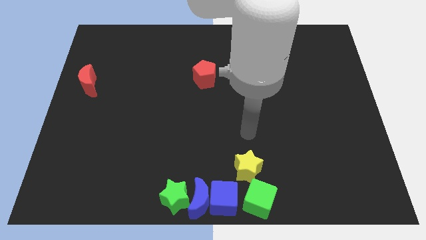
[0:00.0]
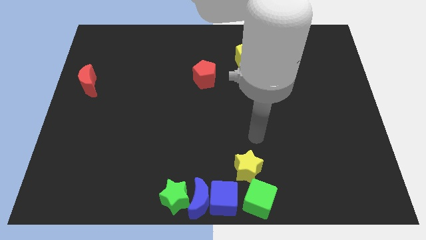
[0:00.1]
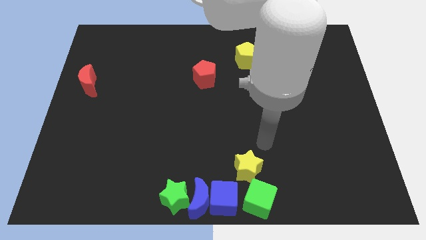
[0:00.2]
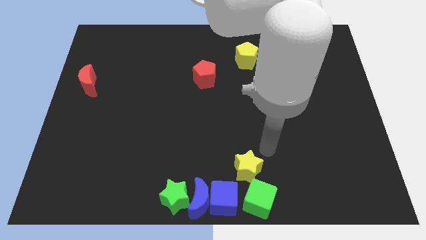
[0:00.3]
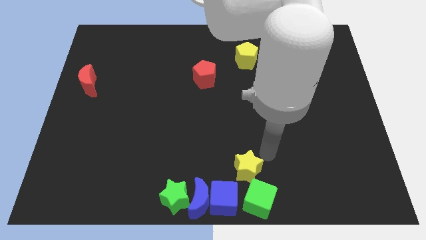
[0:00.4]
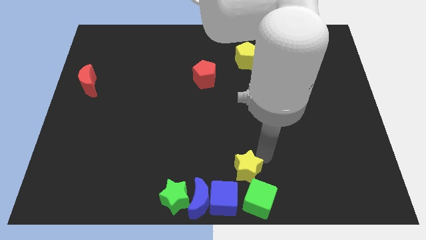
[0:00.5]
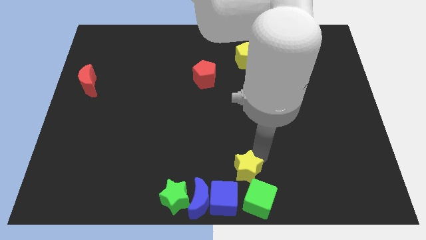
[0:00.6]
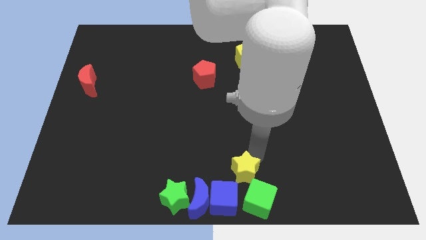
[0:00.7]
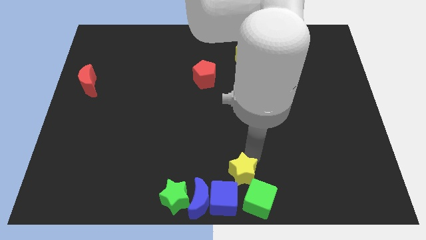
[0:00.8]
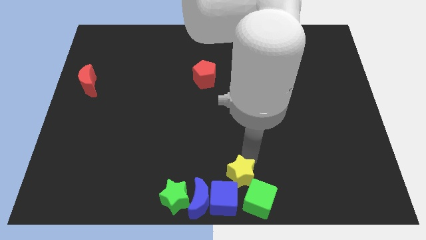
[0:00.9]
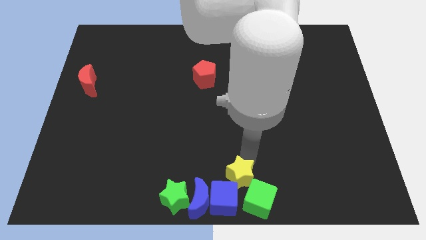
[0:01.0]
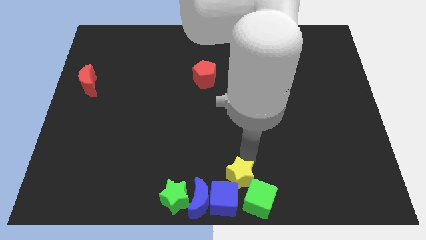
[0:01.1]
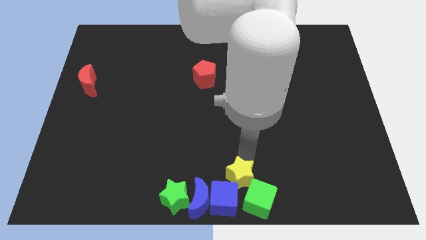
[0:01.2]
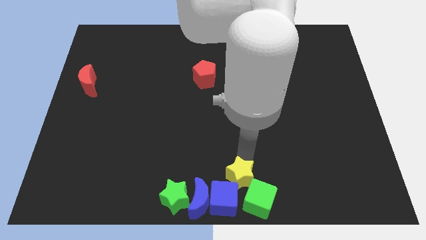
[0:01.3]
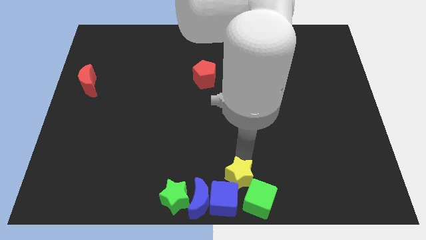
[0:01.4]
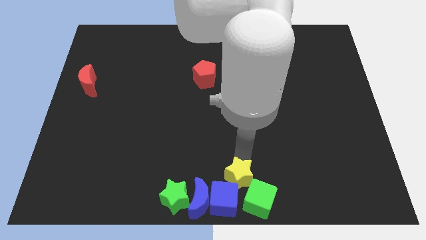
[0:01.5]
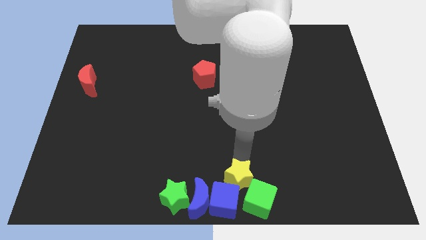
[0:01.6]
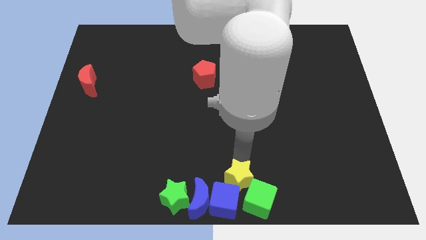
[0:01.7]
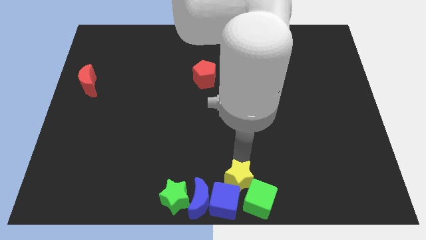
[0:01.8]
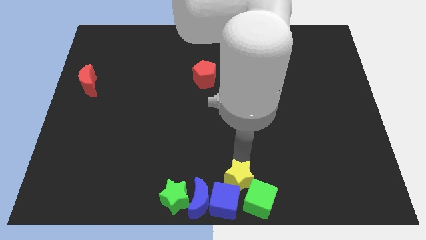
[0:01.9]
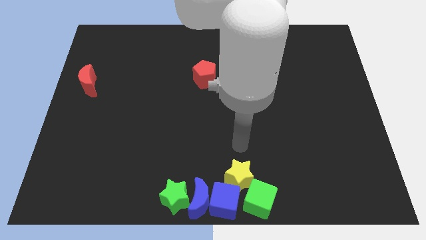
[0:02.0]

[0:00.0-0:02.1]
push the yellow star into the blue cube

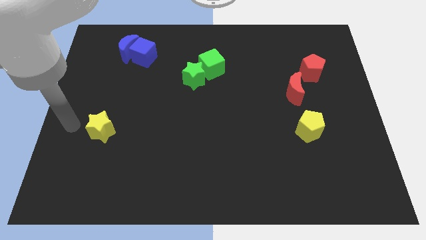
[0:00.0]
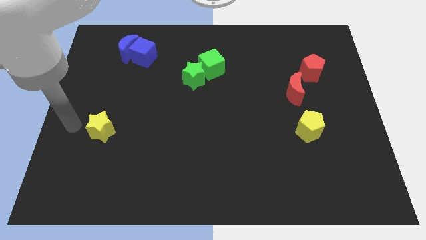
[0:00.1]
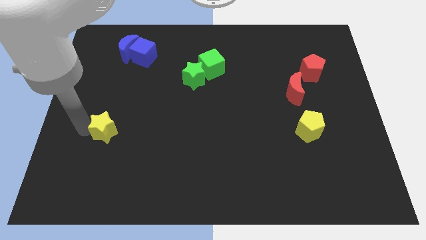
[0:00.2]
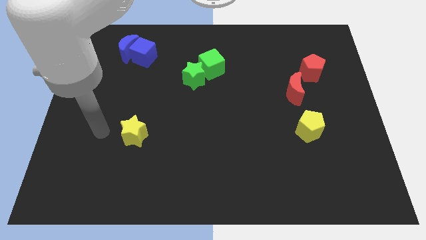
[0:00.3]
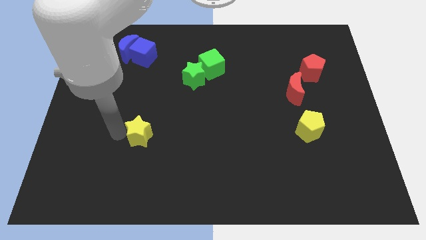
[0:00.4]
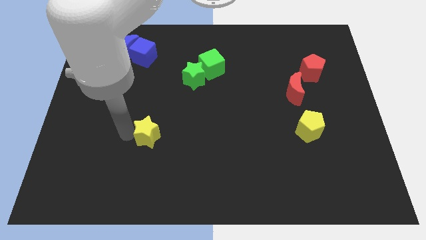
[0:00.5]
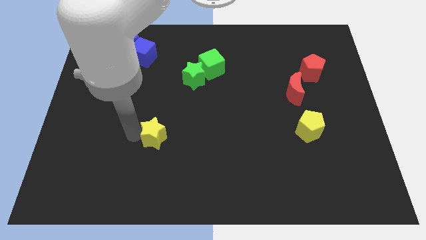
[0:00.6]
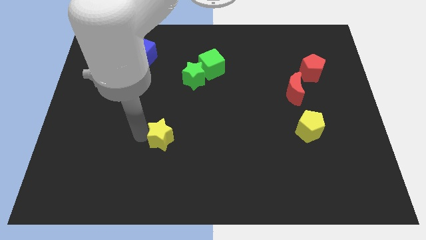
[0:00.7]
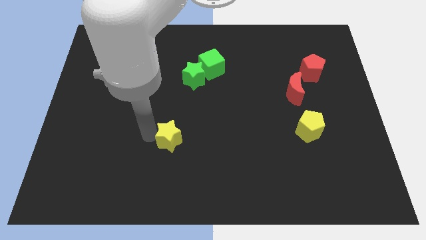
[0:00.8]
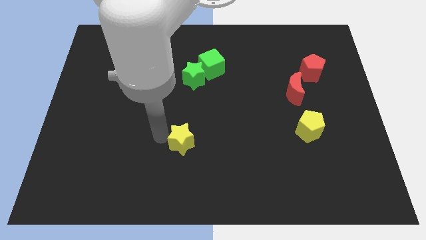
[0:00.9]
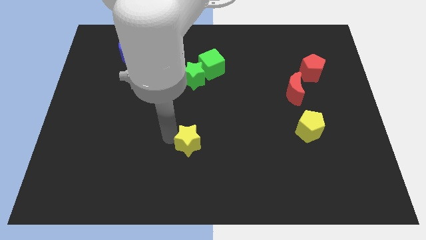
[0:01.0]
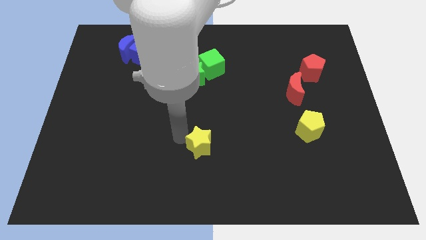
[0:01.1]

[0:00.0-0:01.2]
move the yellow star to the bottom of the green star

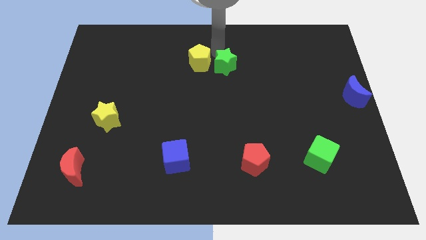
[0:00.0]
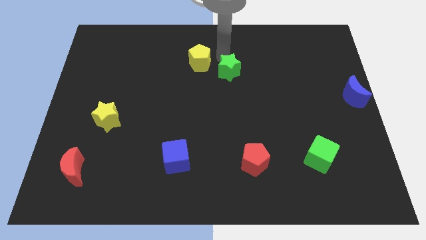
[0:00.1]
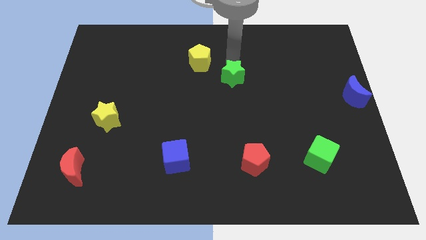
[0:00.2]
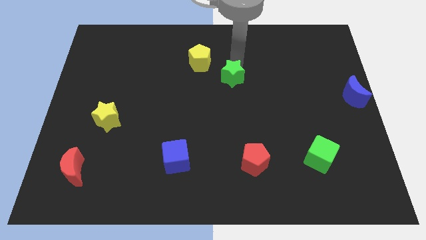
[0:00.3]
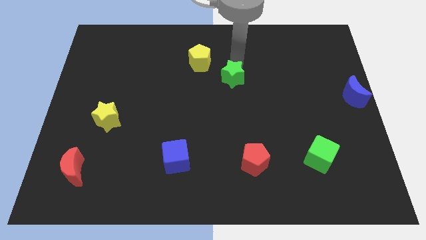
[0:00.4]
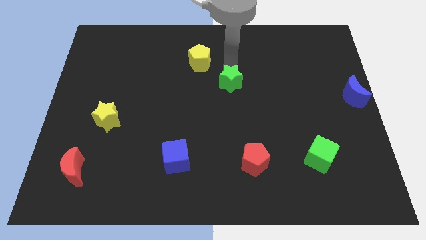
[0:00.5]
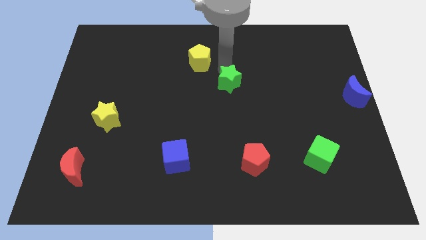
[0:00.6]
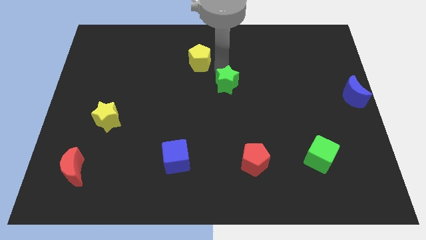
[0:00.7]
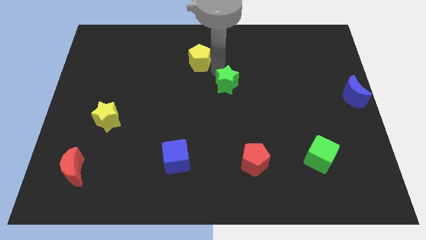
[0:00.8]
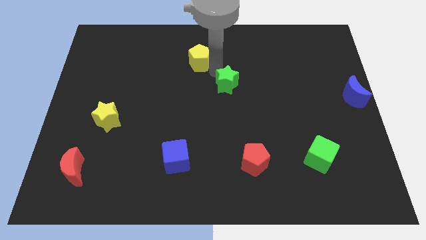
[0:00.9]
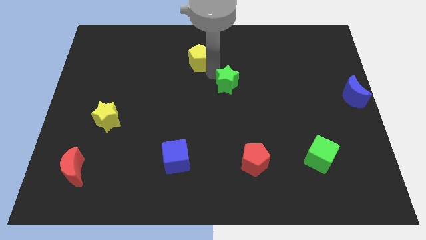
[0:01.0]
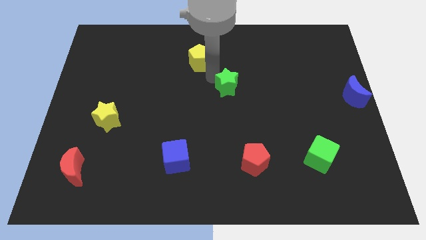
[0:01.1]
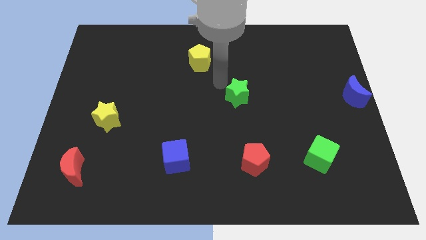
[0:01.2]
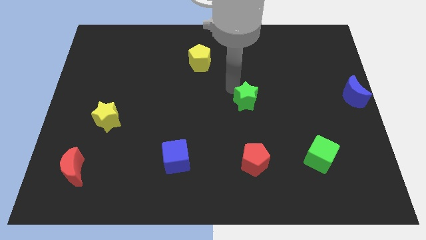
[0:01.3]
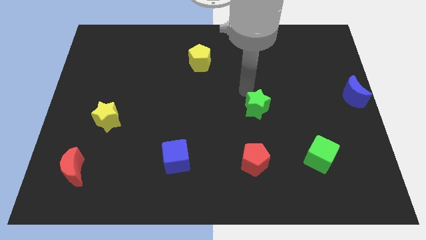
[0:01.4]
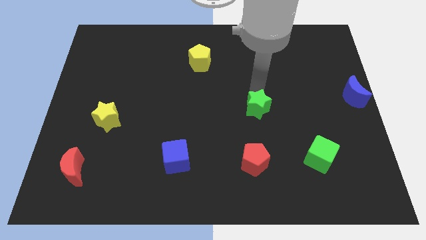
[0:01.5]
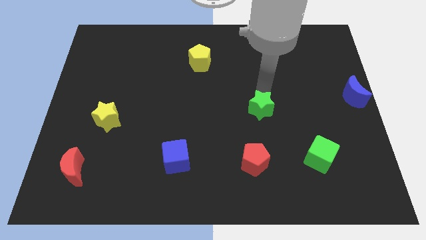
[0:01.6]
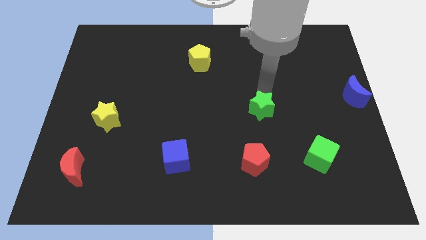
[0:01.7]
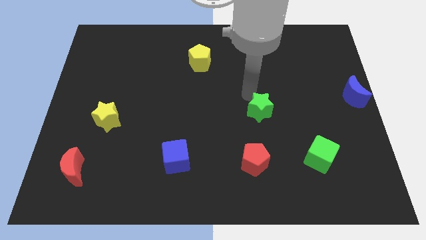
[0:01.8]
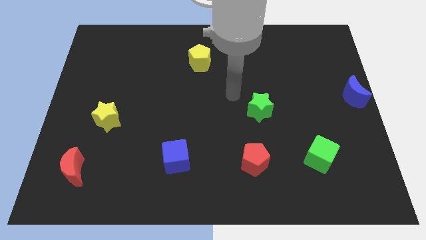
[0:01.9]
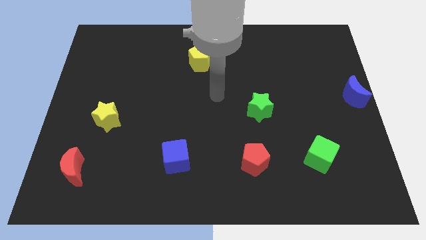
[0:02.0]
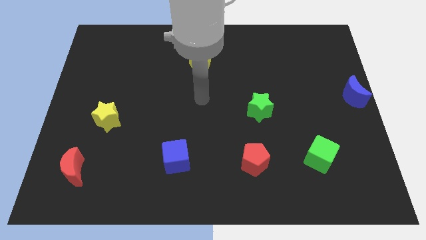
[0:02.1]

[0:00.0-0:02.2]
move the green star towards the red pentagon

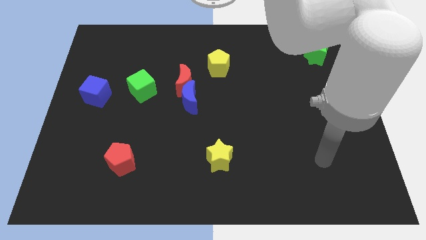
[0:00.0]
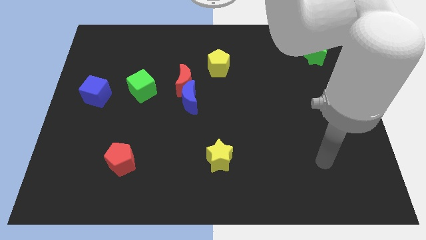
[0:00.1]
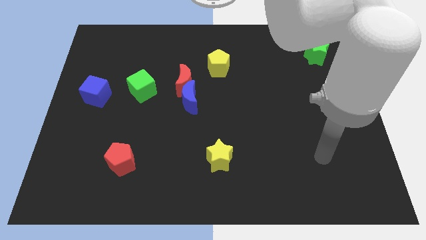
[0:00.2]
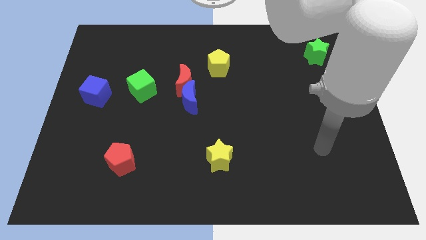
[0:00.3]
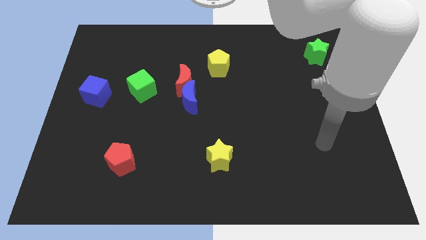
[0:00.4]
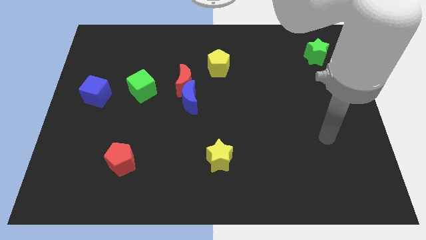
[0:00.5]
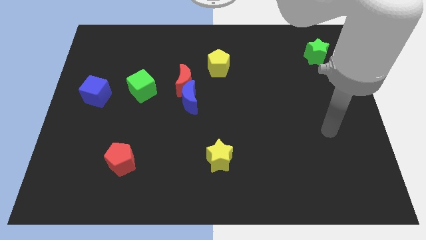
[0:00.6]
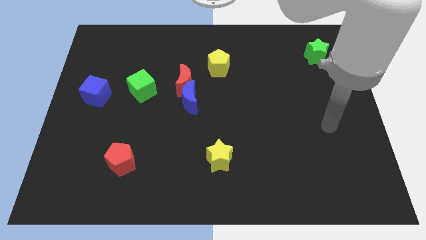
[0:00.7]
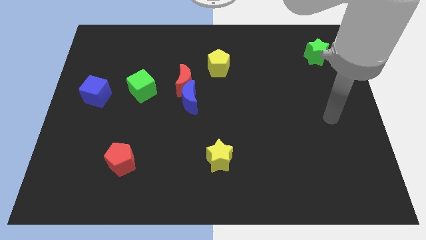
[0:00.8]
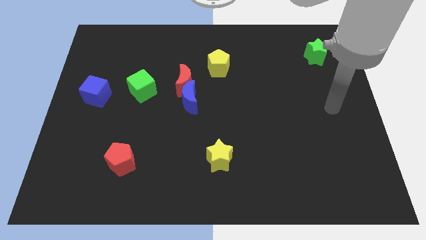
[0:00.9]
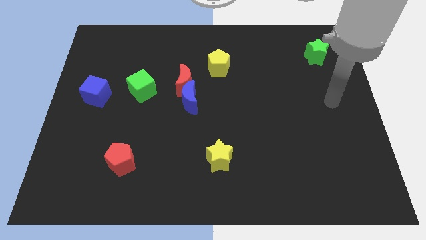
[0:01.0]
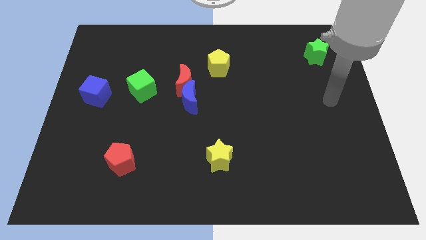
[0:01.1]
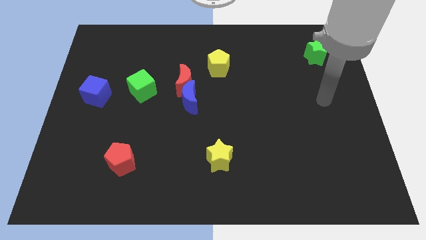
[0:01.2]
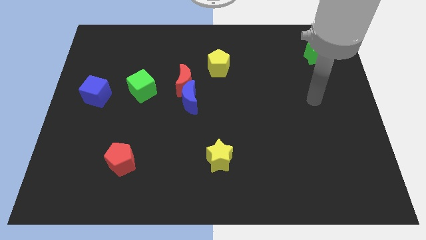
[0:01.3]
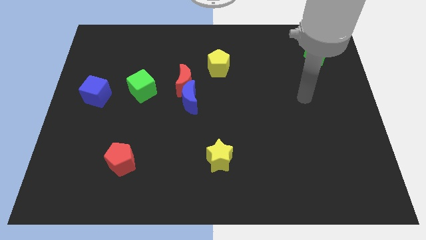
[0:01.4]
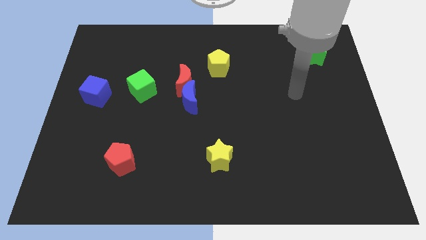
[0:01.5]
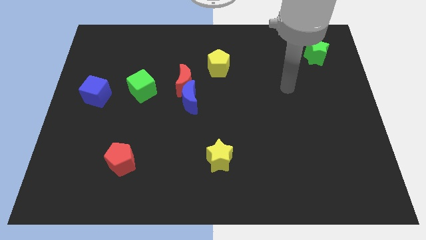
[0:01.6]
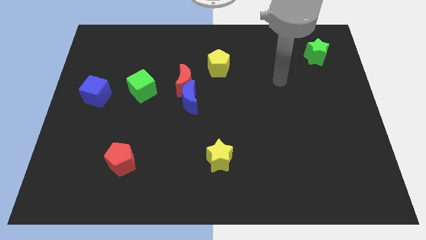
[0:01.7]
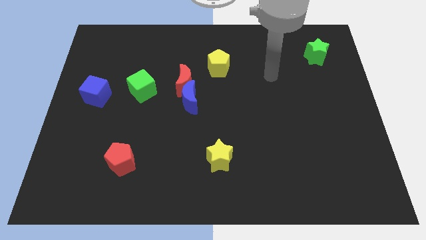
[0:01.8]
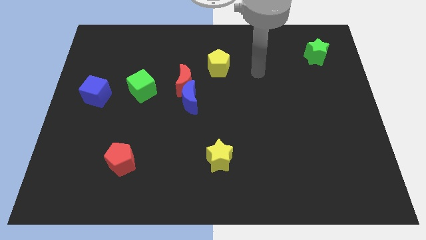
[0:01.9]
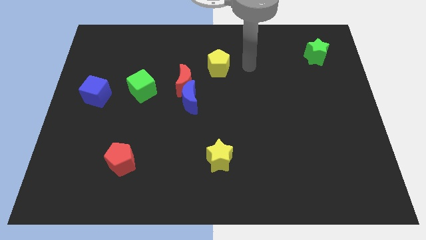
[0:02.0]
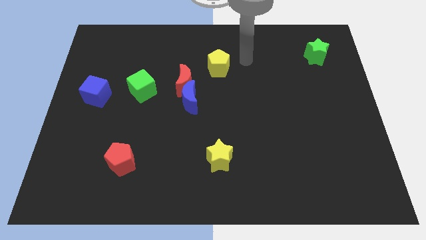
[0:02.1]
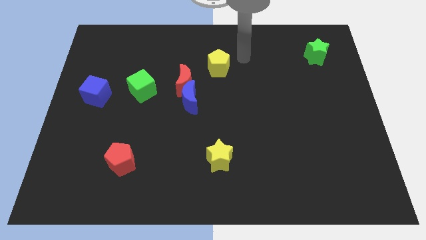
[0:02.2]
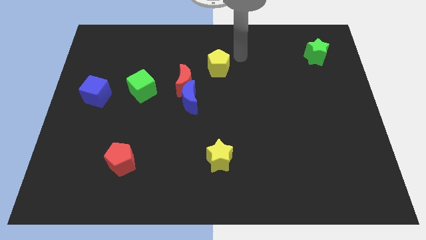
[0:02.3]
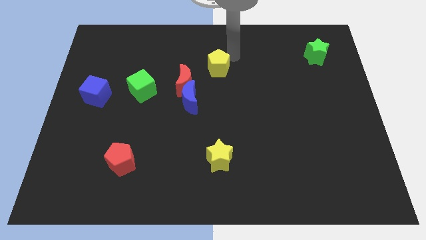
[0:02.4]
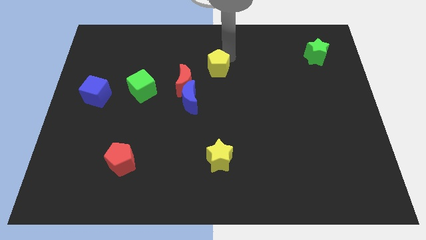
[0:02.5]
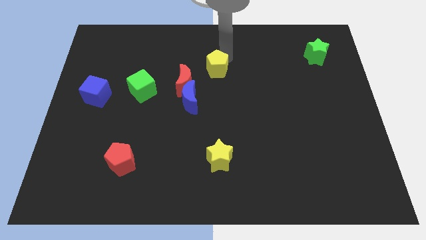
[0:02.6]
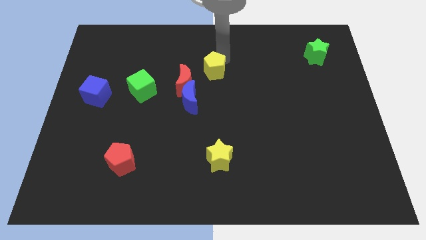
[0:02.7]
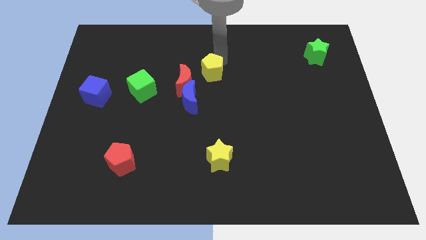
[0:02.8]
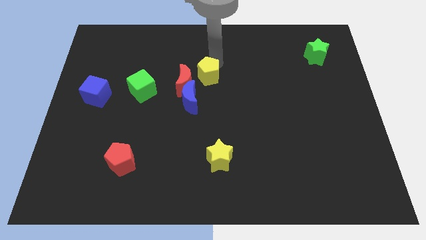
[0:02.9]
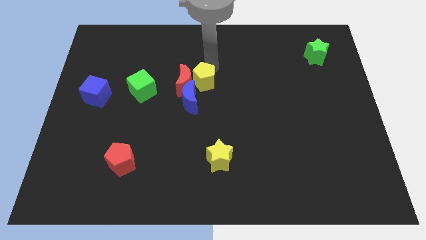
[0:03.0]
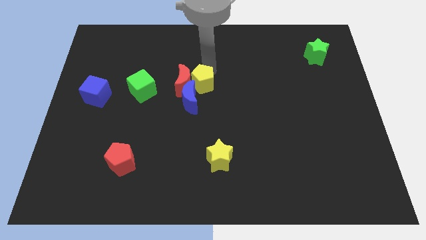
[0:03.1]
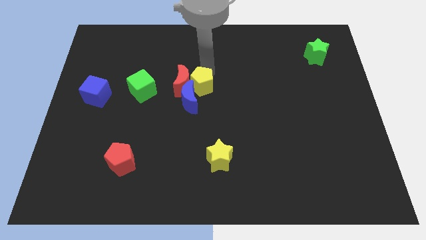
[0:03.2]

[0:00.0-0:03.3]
push the yellow pentagon to the right side of the red crescent

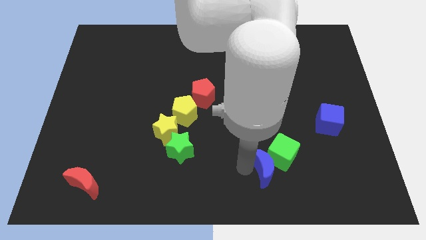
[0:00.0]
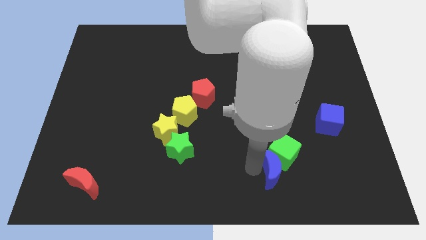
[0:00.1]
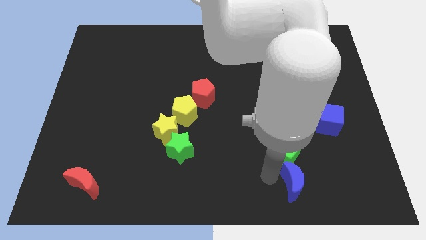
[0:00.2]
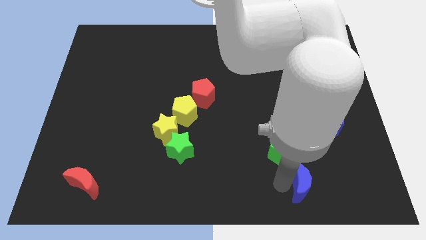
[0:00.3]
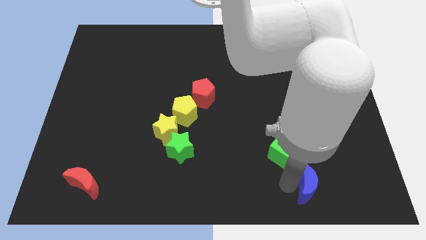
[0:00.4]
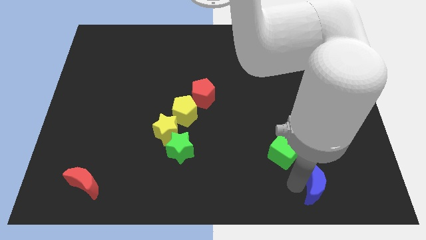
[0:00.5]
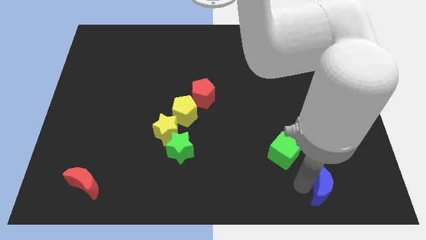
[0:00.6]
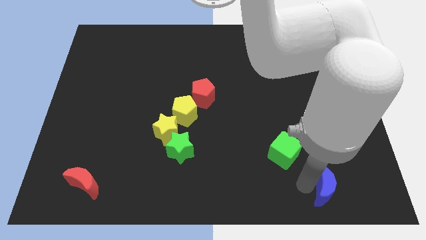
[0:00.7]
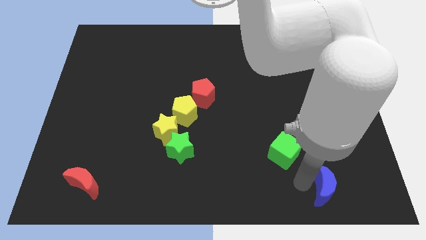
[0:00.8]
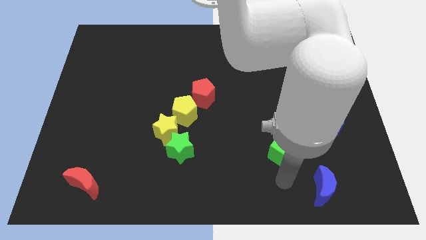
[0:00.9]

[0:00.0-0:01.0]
take the blue moon away from the green cube
